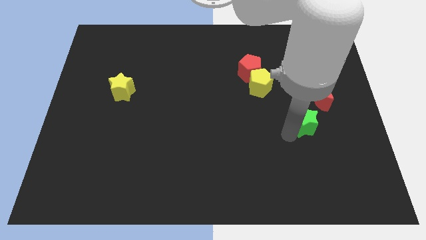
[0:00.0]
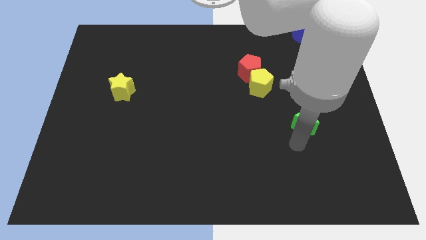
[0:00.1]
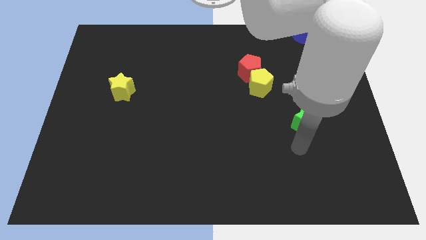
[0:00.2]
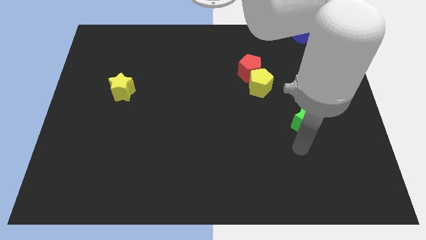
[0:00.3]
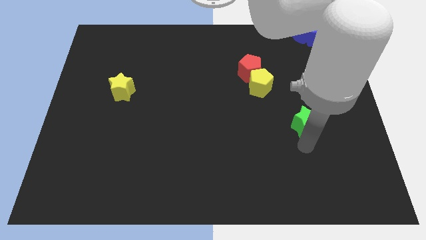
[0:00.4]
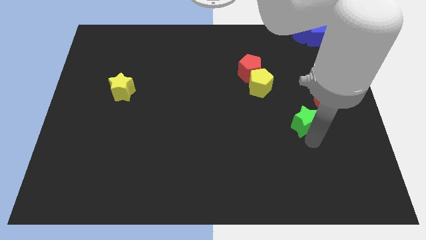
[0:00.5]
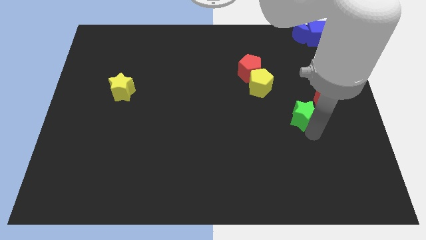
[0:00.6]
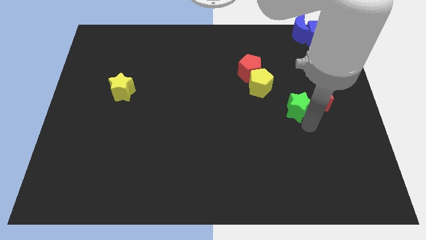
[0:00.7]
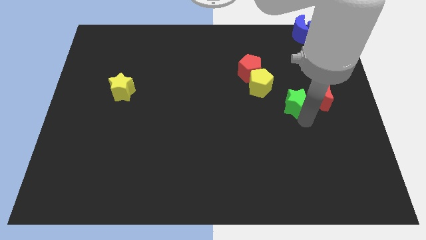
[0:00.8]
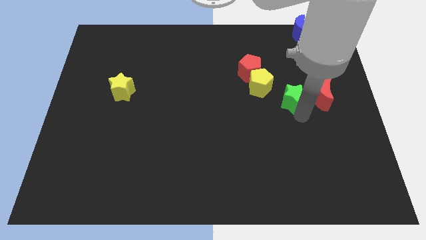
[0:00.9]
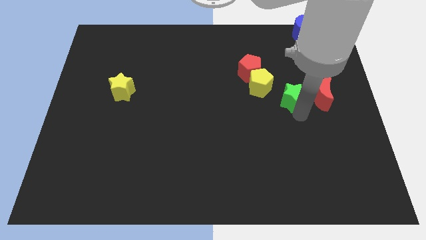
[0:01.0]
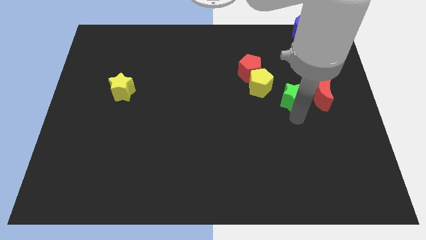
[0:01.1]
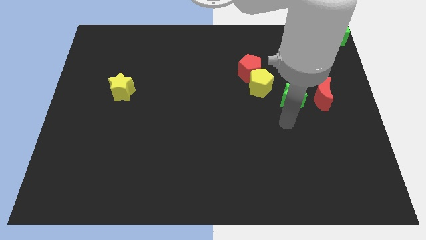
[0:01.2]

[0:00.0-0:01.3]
put the green star to the left side of the red crescent

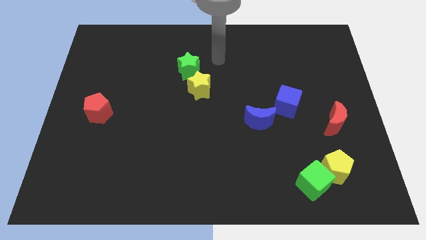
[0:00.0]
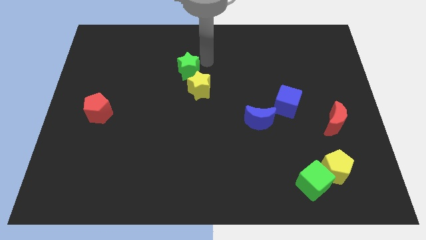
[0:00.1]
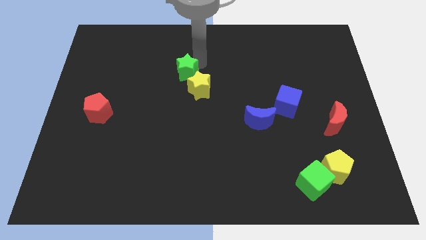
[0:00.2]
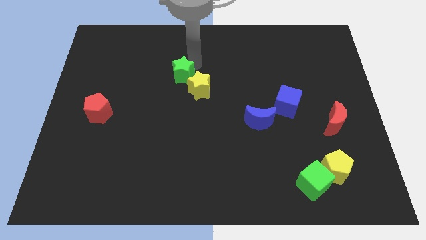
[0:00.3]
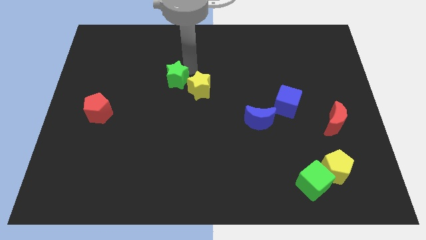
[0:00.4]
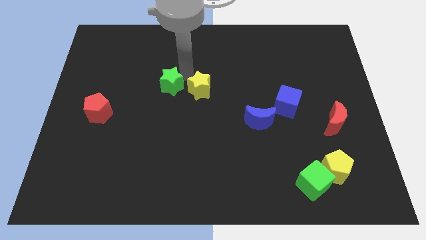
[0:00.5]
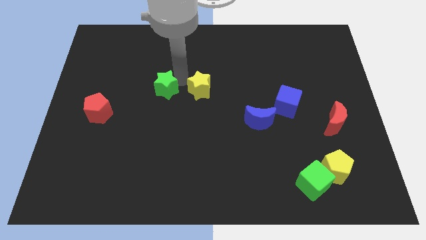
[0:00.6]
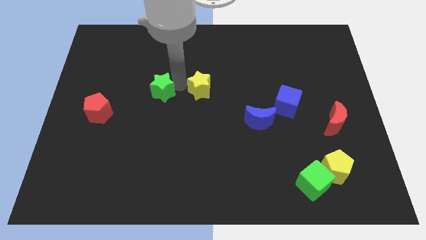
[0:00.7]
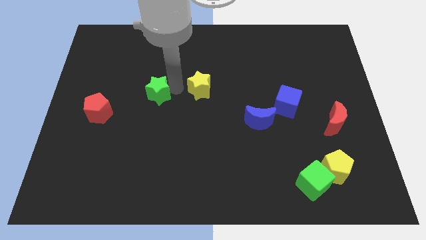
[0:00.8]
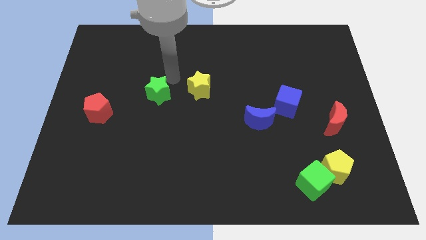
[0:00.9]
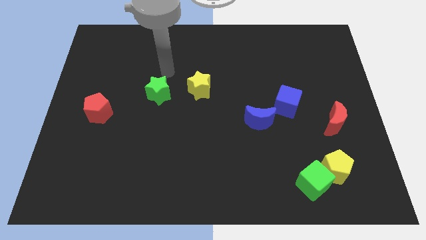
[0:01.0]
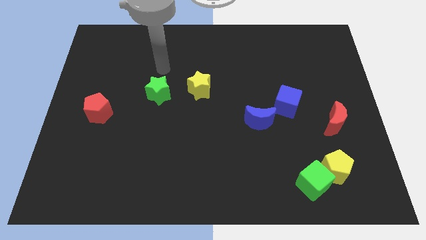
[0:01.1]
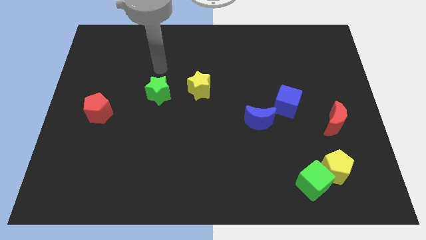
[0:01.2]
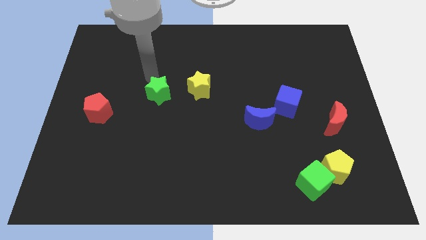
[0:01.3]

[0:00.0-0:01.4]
place green star left to yellow star

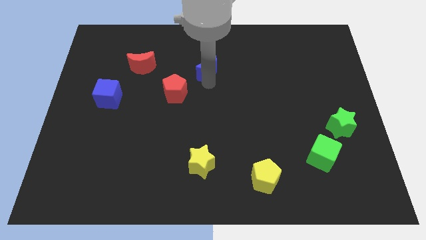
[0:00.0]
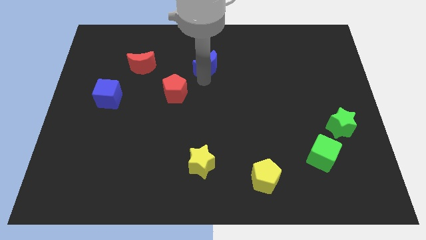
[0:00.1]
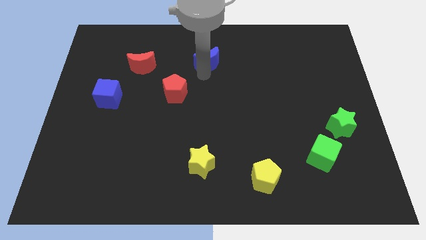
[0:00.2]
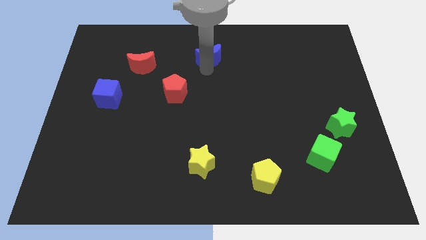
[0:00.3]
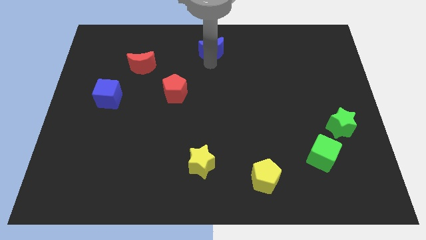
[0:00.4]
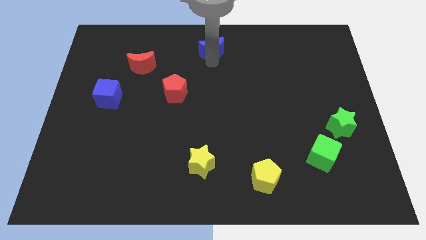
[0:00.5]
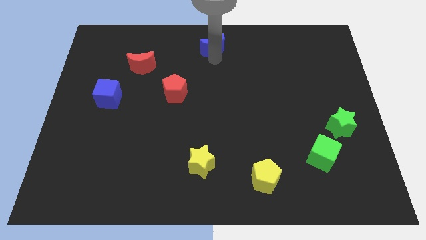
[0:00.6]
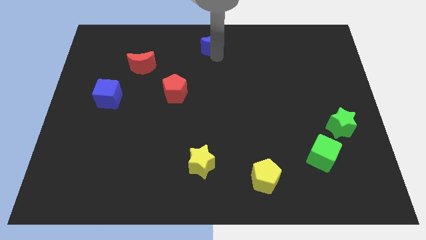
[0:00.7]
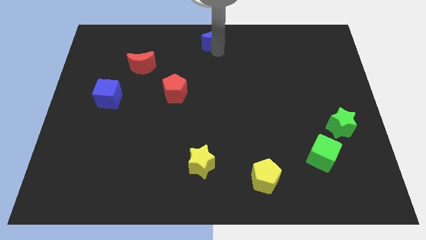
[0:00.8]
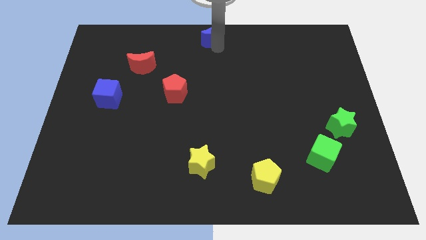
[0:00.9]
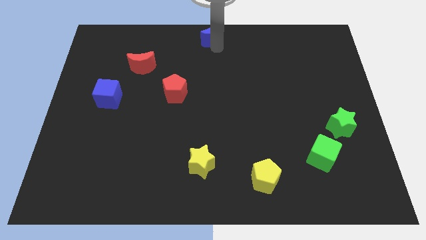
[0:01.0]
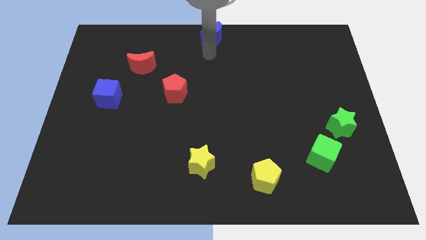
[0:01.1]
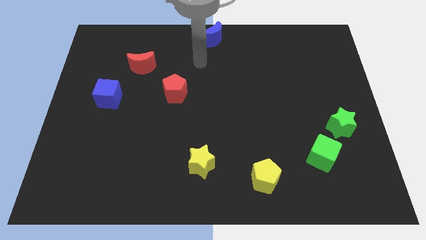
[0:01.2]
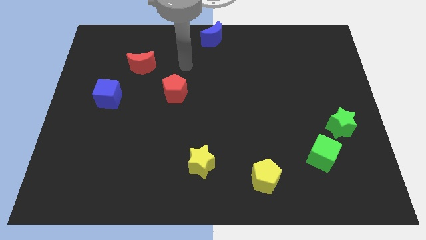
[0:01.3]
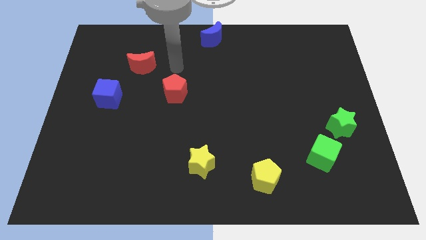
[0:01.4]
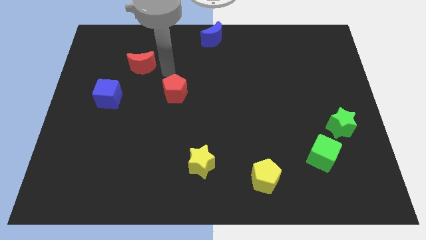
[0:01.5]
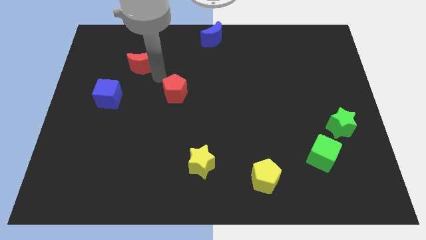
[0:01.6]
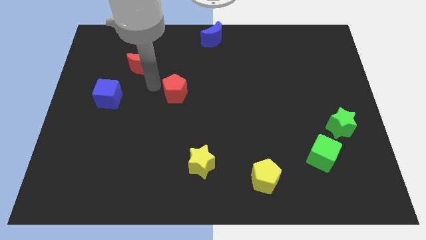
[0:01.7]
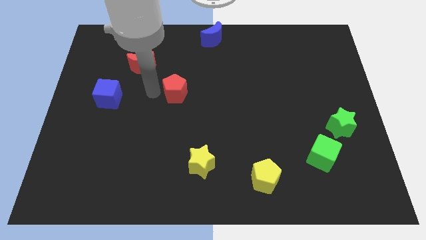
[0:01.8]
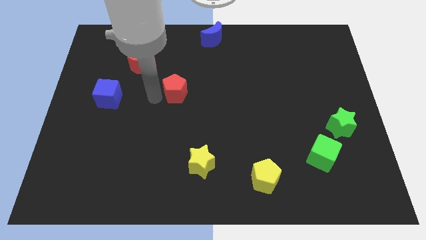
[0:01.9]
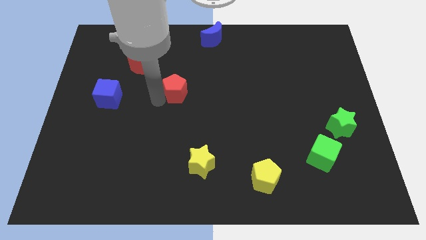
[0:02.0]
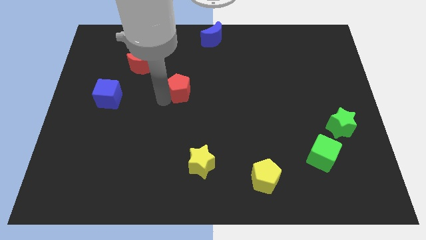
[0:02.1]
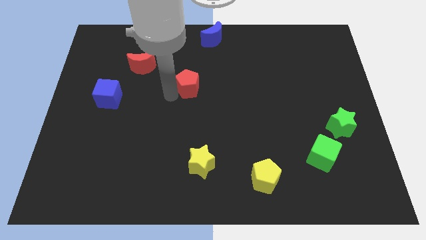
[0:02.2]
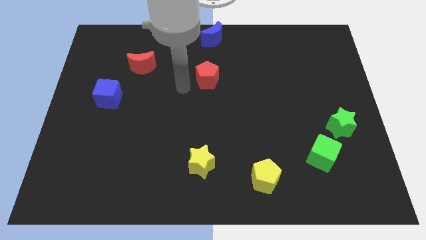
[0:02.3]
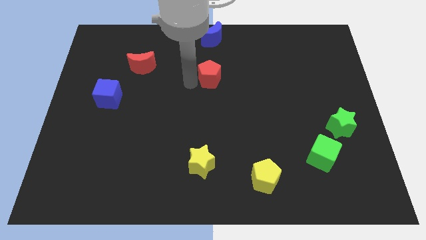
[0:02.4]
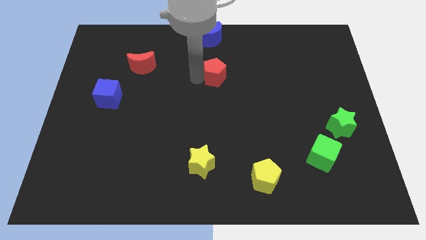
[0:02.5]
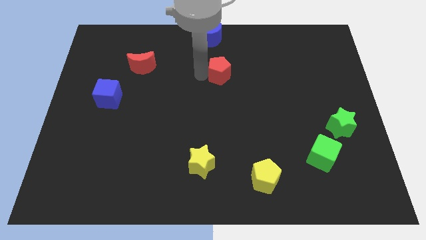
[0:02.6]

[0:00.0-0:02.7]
place red pentagon below blue crescent

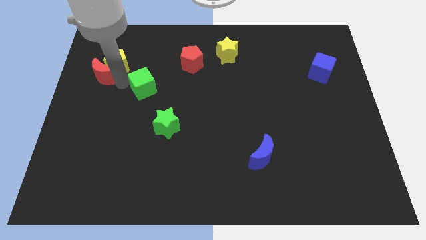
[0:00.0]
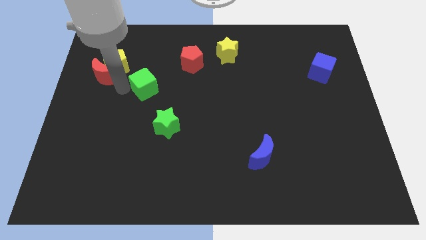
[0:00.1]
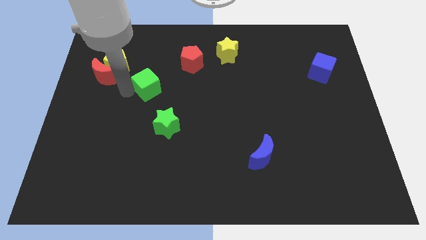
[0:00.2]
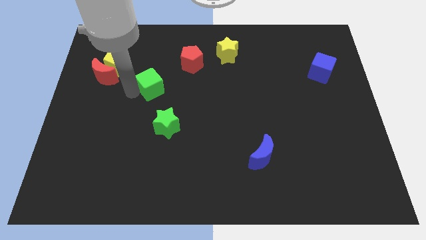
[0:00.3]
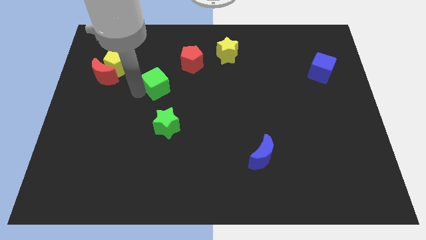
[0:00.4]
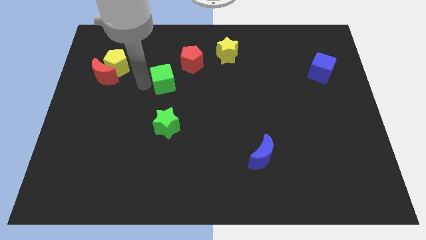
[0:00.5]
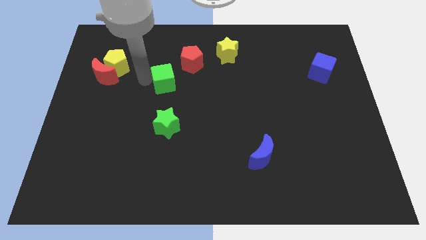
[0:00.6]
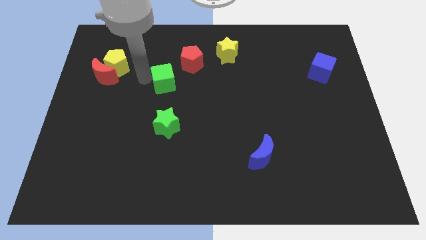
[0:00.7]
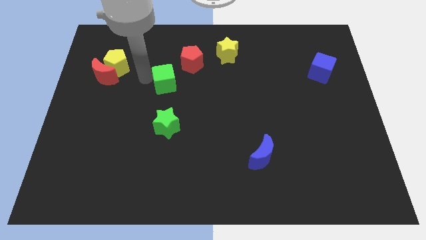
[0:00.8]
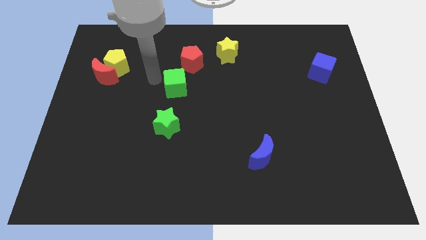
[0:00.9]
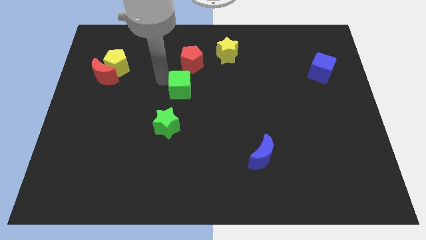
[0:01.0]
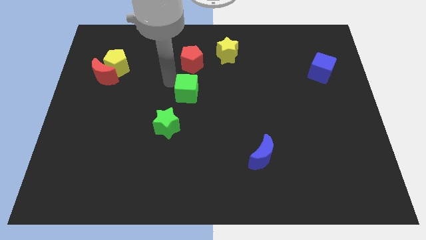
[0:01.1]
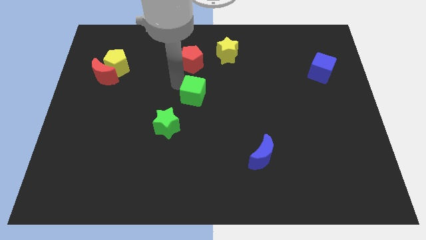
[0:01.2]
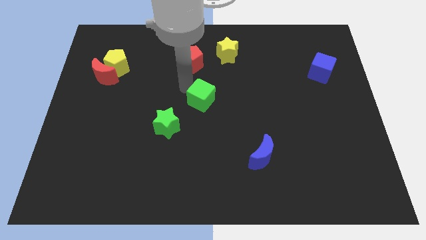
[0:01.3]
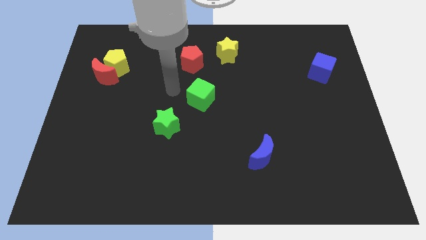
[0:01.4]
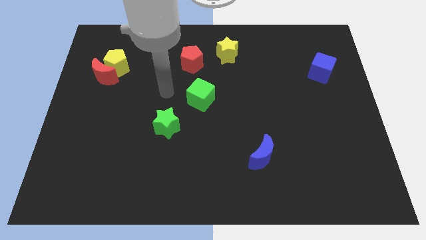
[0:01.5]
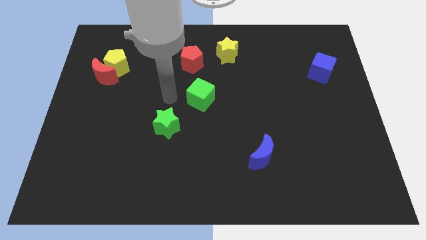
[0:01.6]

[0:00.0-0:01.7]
move the green cube parallel to the bottom of the red pentagon

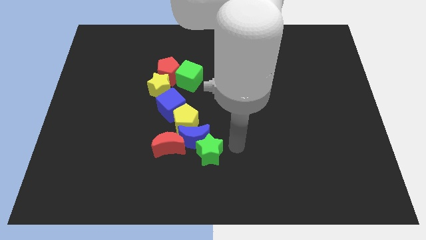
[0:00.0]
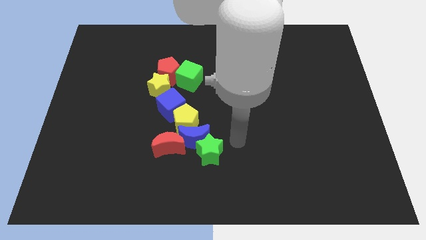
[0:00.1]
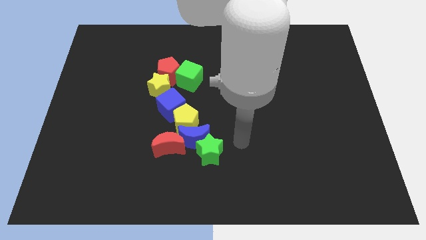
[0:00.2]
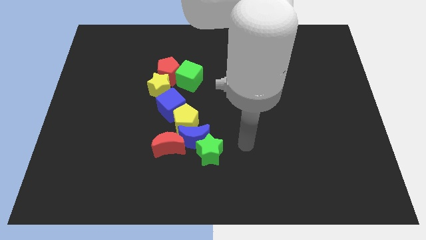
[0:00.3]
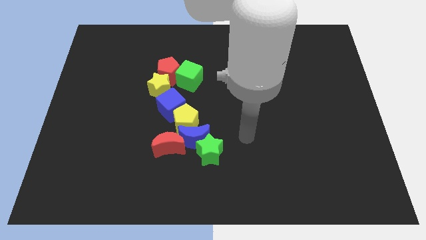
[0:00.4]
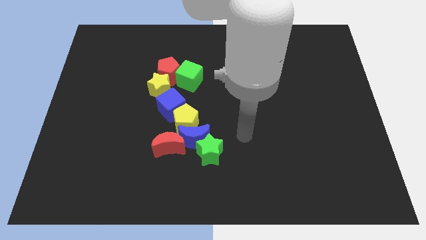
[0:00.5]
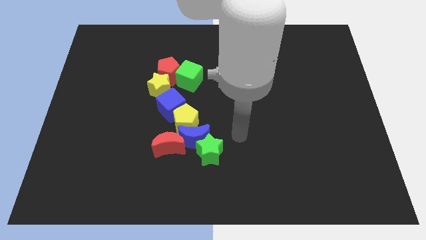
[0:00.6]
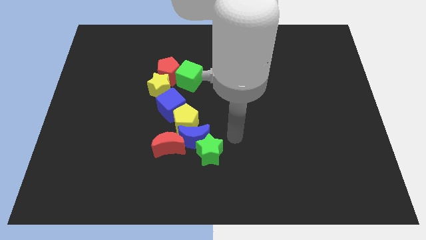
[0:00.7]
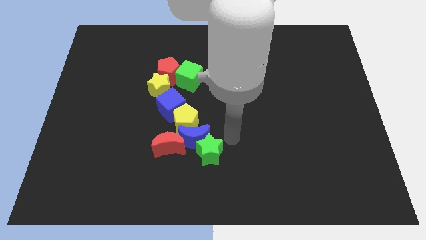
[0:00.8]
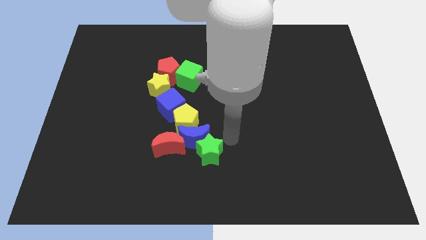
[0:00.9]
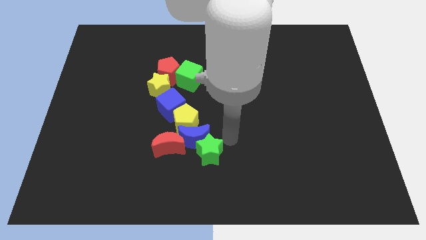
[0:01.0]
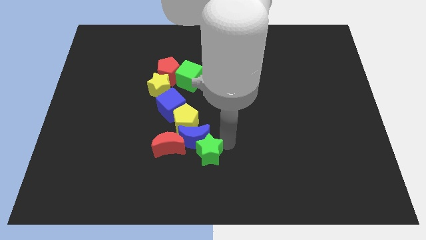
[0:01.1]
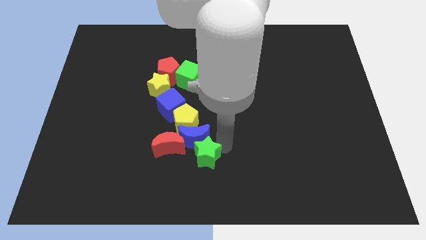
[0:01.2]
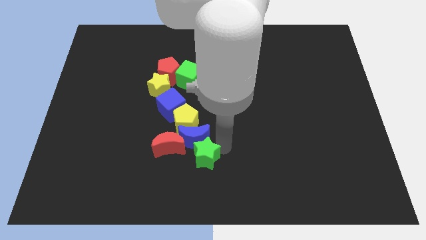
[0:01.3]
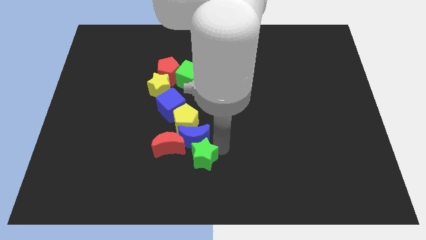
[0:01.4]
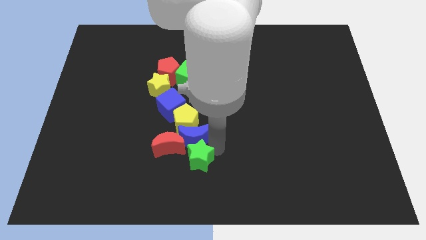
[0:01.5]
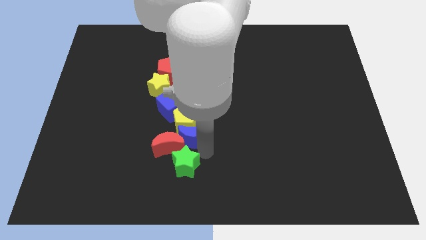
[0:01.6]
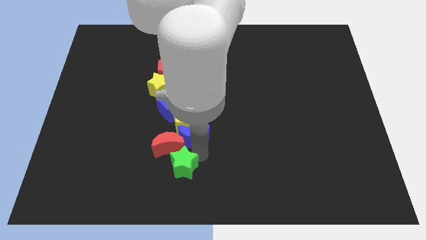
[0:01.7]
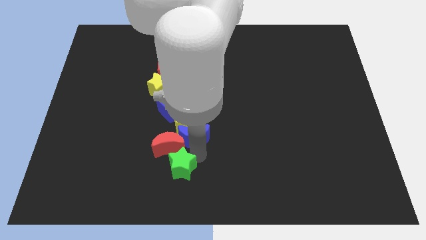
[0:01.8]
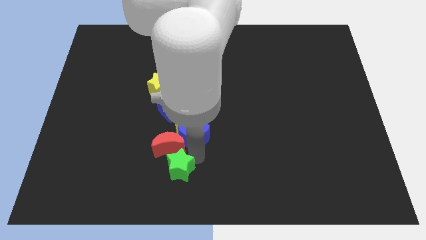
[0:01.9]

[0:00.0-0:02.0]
separate the green star from the blue moon
